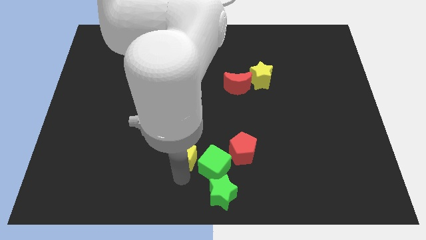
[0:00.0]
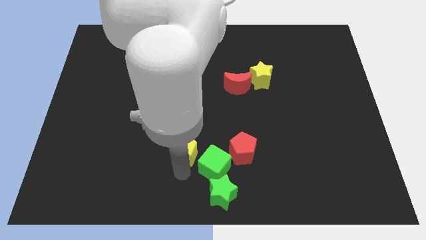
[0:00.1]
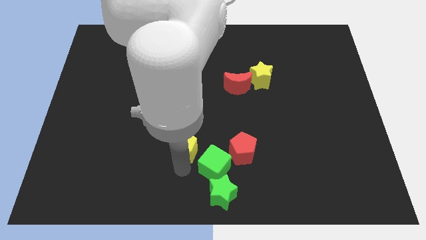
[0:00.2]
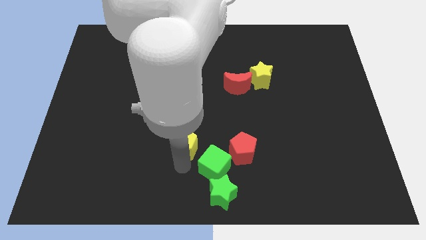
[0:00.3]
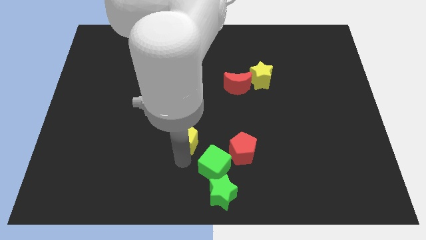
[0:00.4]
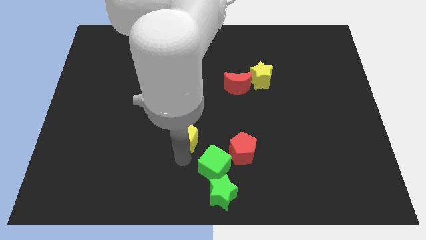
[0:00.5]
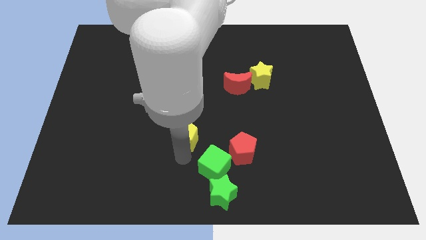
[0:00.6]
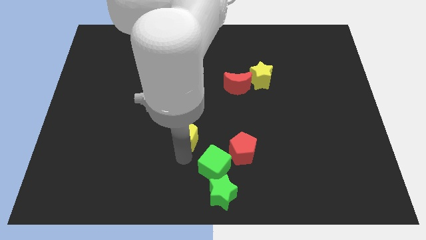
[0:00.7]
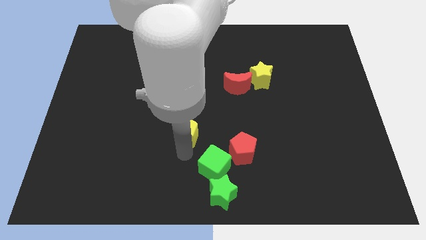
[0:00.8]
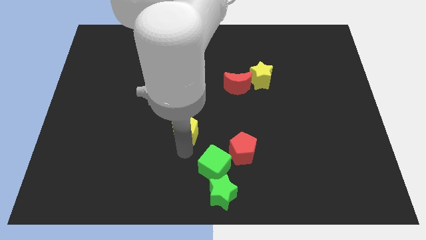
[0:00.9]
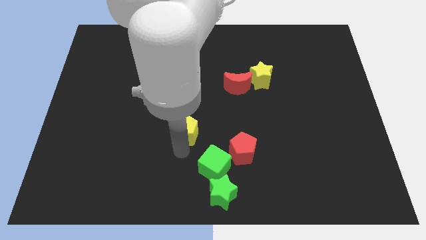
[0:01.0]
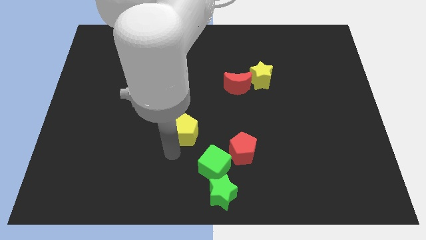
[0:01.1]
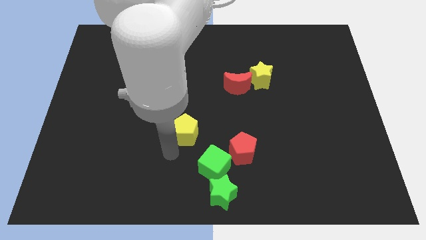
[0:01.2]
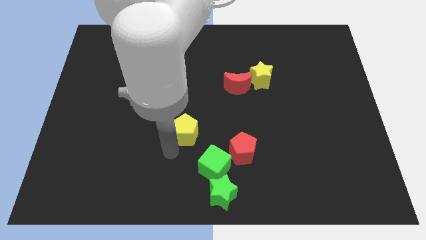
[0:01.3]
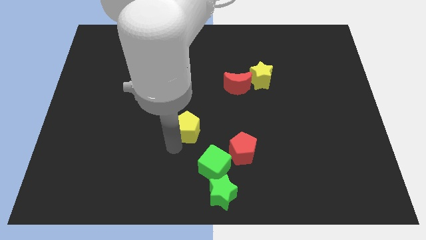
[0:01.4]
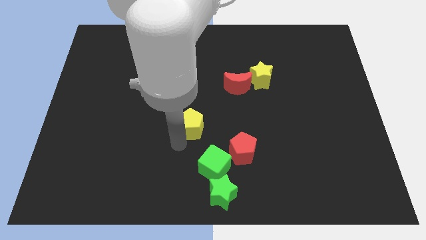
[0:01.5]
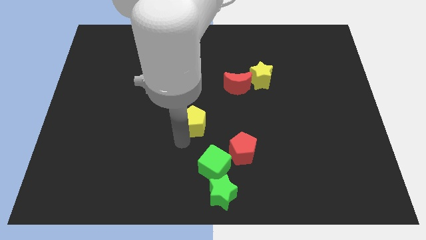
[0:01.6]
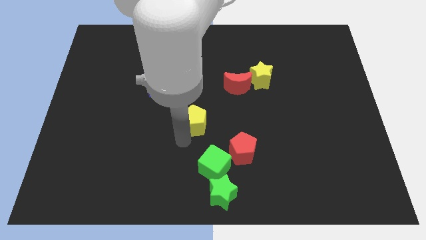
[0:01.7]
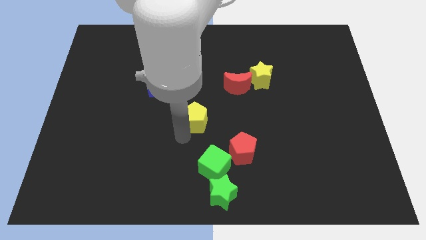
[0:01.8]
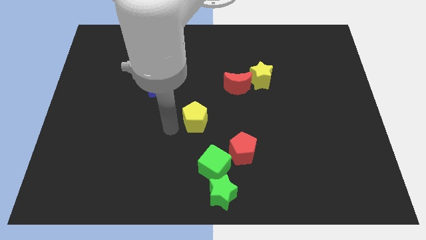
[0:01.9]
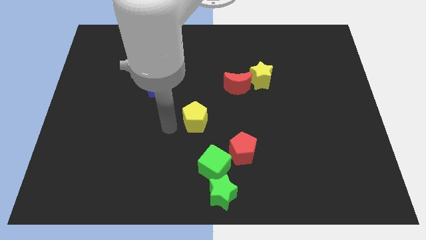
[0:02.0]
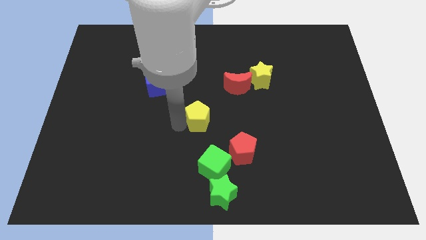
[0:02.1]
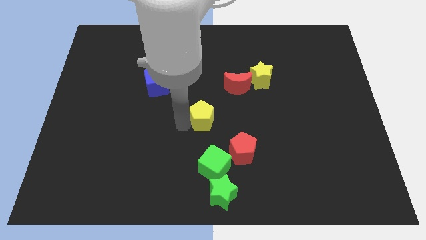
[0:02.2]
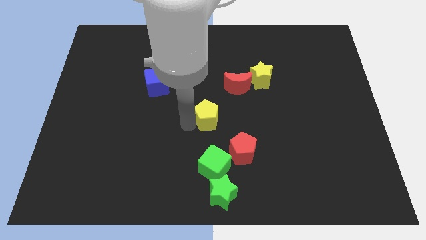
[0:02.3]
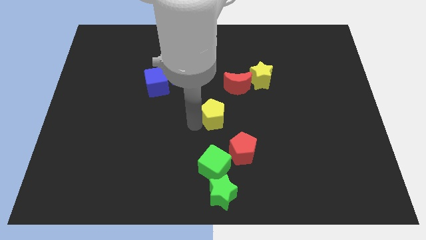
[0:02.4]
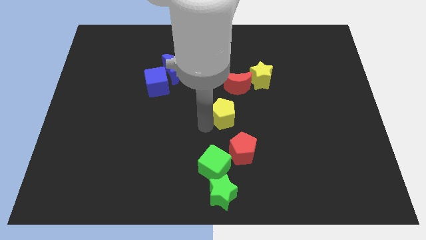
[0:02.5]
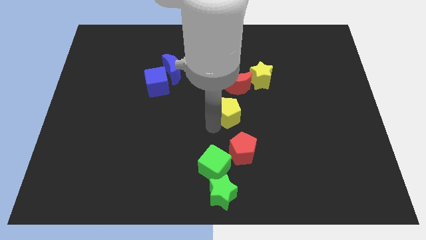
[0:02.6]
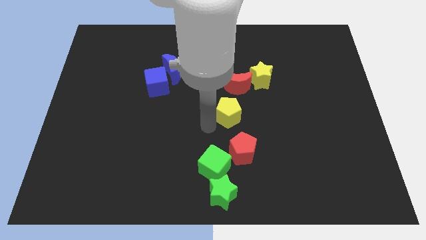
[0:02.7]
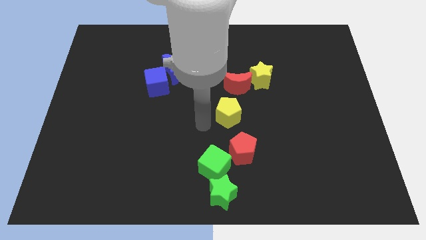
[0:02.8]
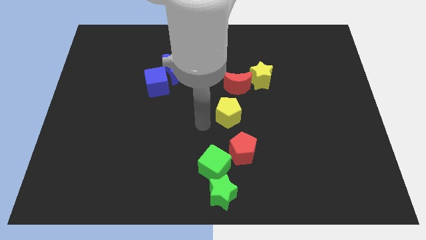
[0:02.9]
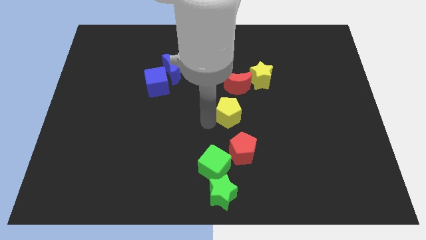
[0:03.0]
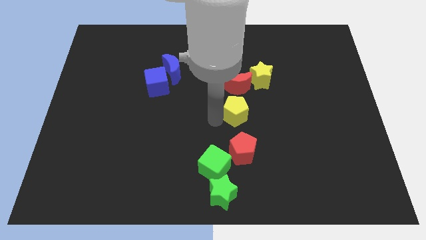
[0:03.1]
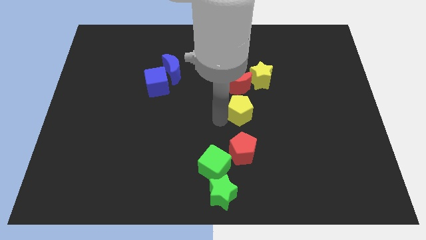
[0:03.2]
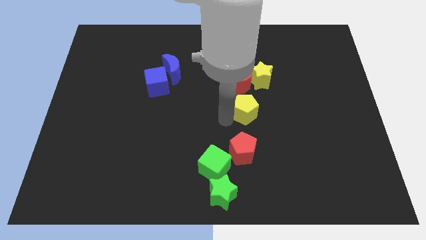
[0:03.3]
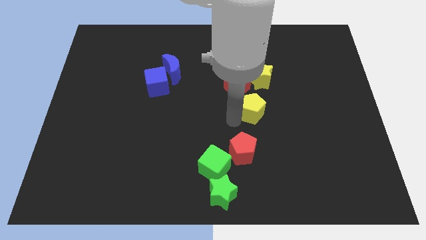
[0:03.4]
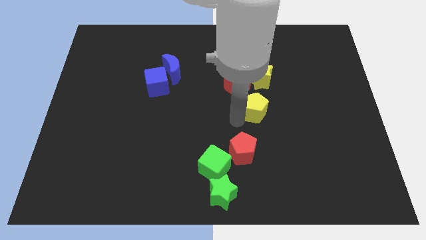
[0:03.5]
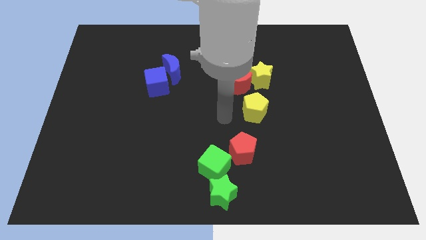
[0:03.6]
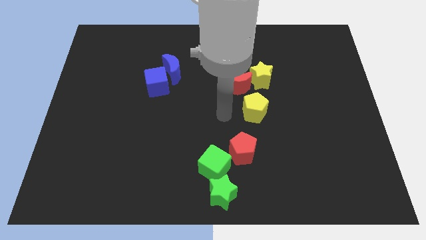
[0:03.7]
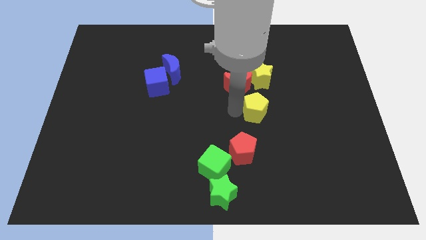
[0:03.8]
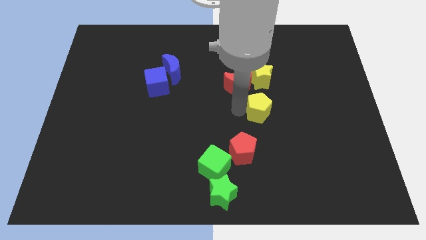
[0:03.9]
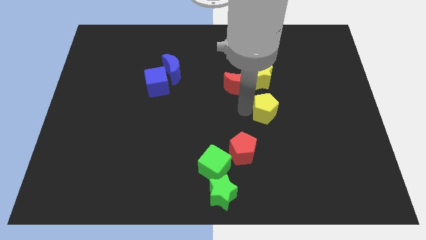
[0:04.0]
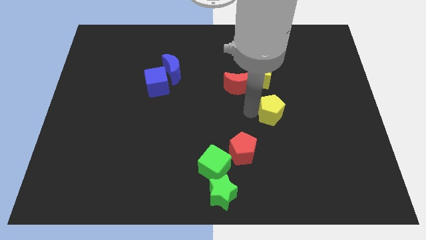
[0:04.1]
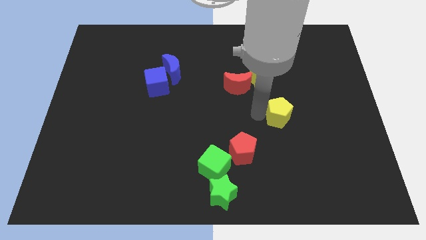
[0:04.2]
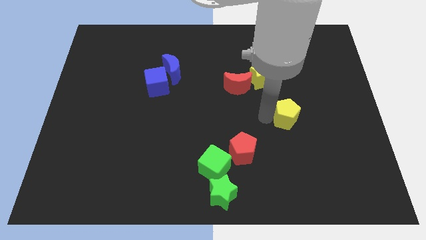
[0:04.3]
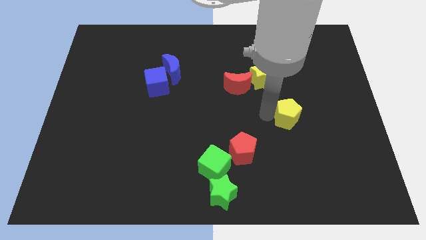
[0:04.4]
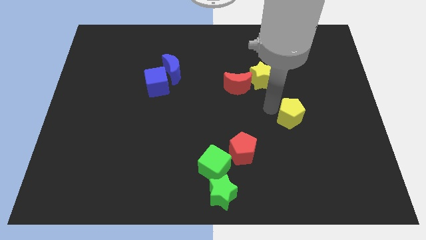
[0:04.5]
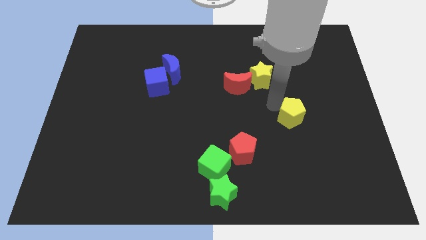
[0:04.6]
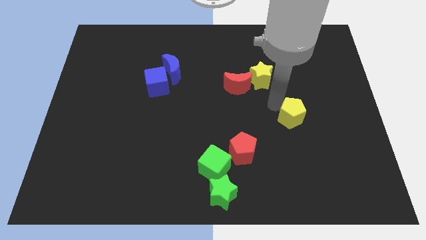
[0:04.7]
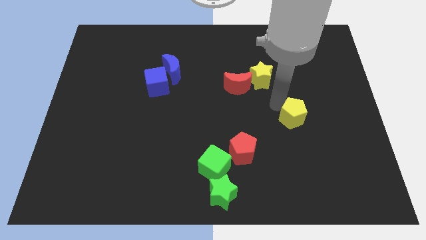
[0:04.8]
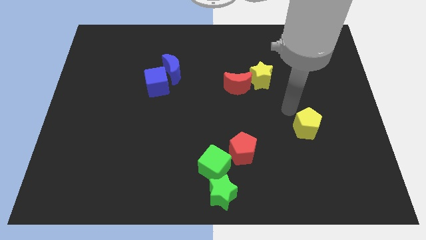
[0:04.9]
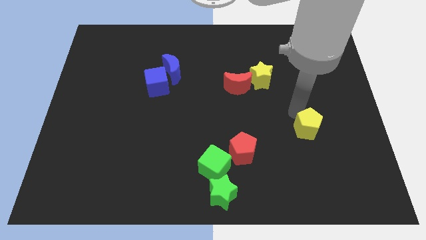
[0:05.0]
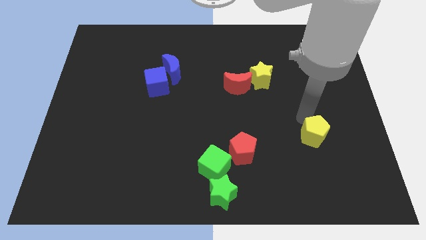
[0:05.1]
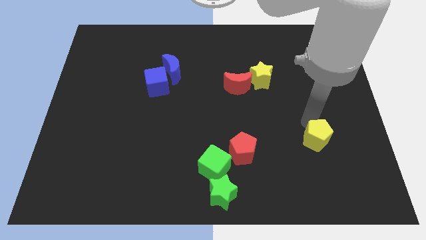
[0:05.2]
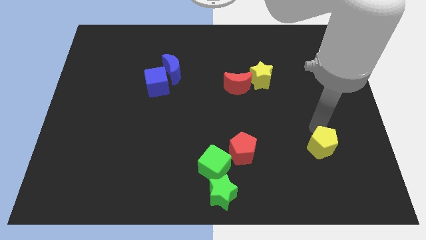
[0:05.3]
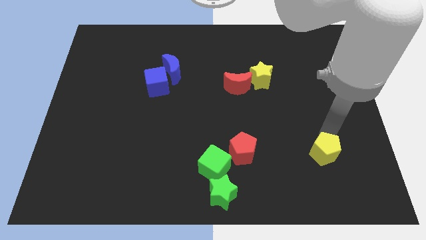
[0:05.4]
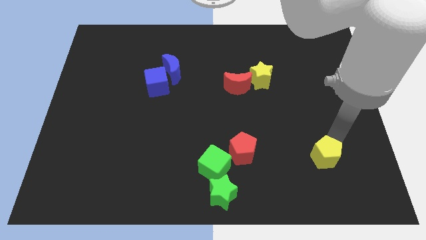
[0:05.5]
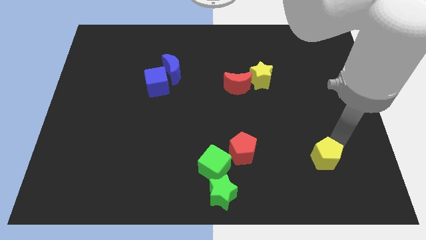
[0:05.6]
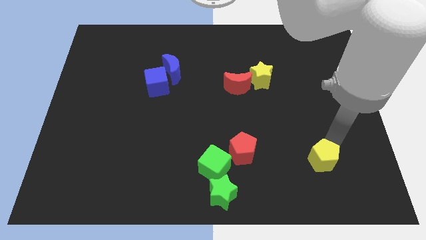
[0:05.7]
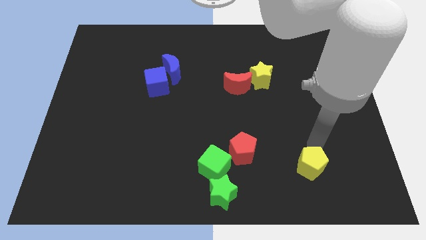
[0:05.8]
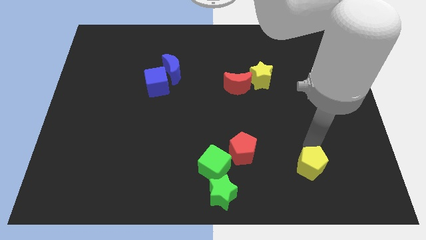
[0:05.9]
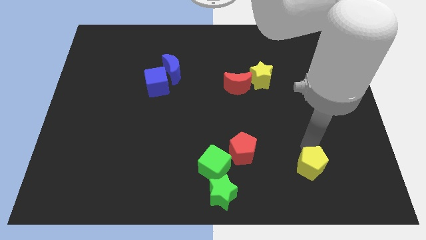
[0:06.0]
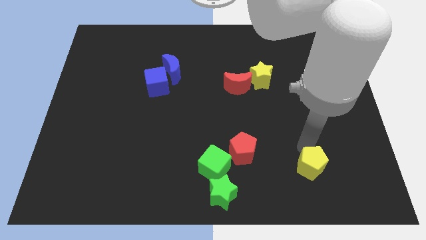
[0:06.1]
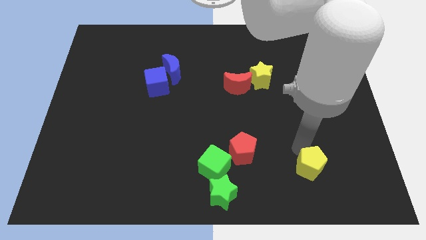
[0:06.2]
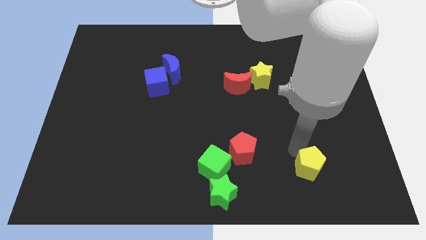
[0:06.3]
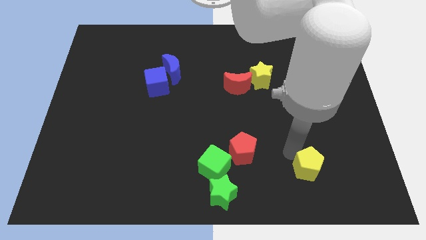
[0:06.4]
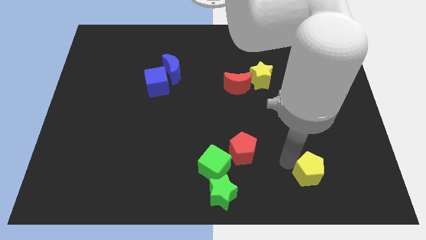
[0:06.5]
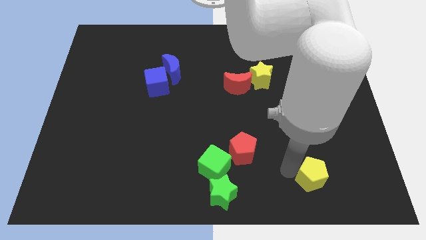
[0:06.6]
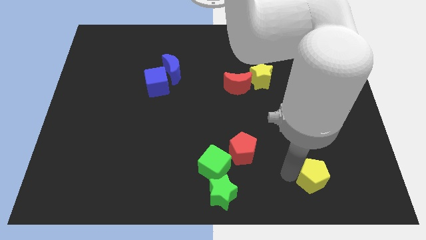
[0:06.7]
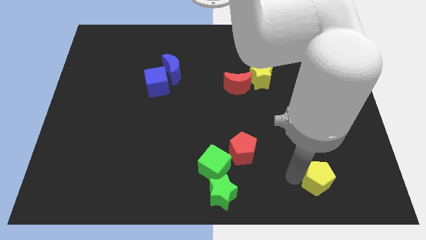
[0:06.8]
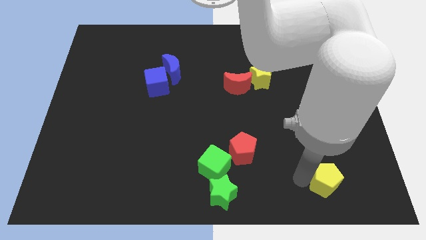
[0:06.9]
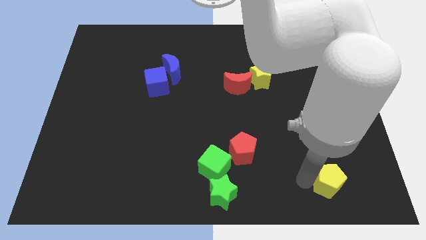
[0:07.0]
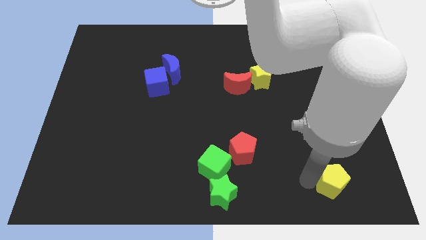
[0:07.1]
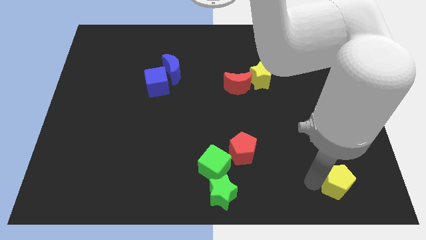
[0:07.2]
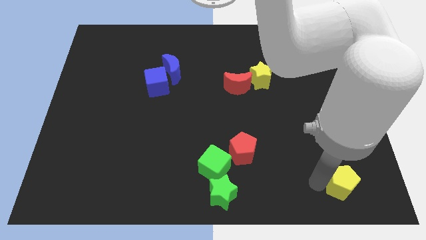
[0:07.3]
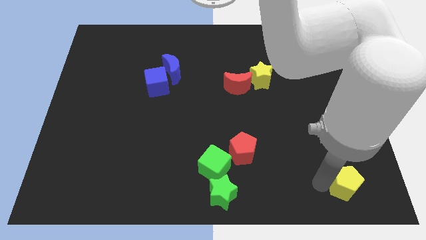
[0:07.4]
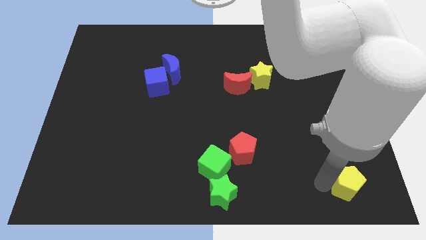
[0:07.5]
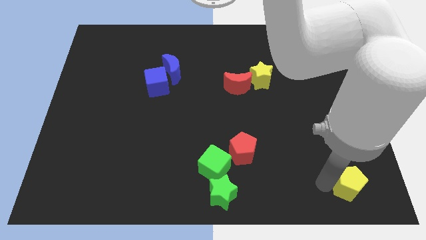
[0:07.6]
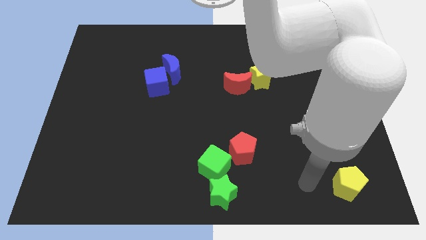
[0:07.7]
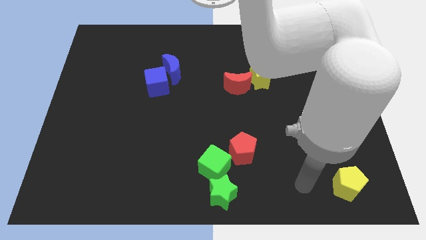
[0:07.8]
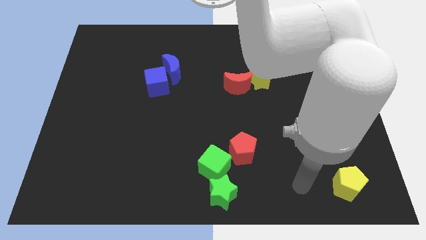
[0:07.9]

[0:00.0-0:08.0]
push the yellow pentagon to the bottom right of the board

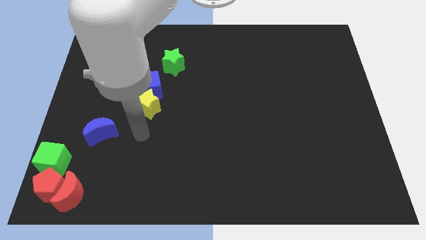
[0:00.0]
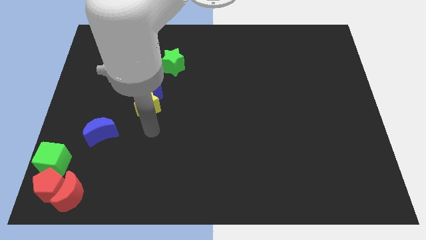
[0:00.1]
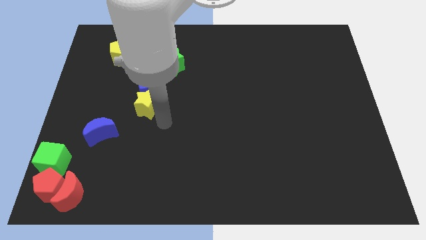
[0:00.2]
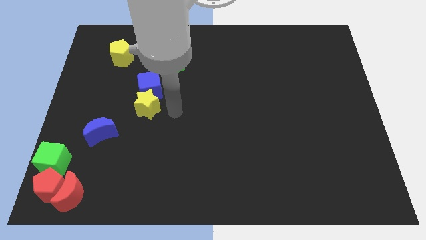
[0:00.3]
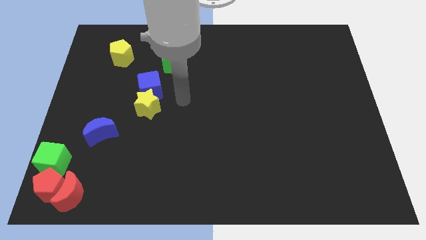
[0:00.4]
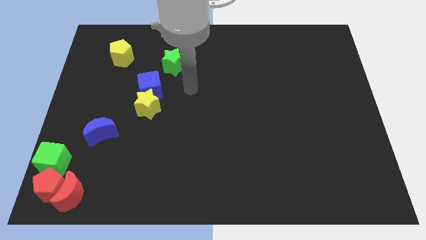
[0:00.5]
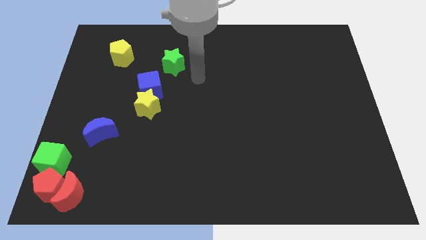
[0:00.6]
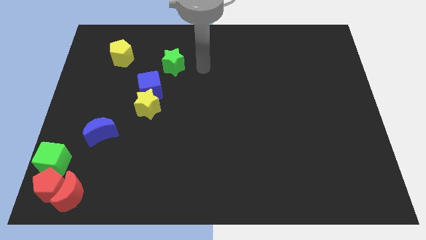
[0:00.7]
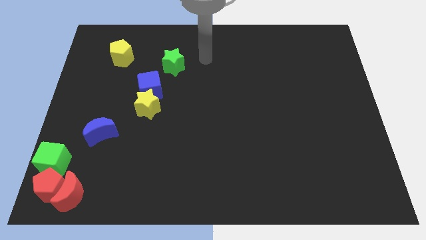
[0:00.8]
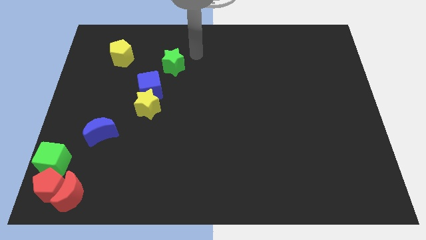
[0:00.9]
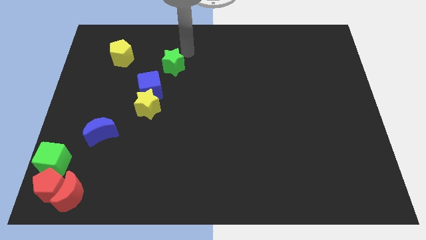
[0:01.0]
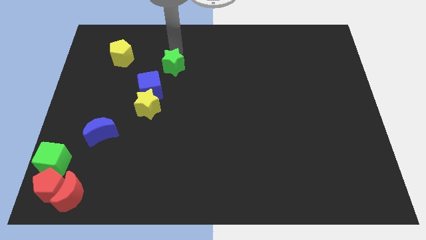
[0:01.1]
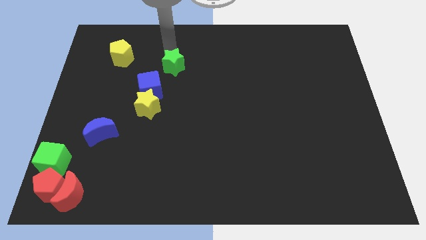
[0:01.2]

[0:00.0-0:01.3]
move your arm to the top of green star
